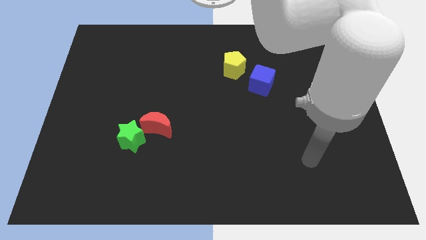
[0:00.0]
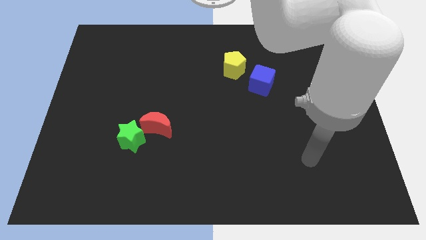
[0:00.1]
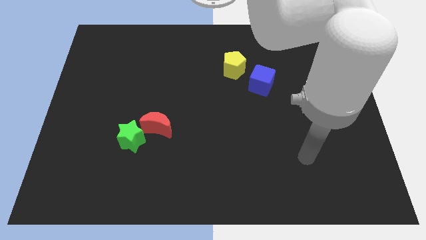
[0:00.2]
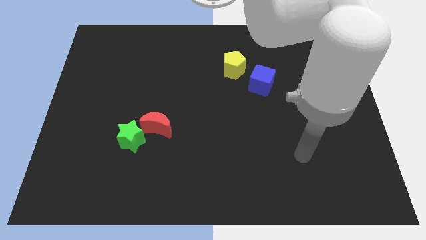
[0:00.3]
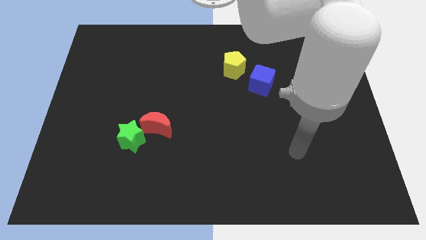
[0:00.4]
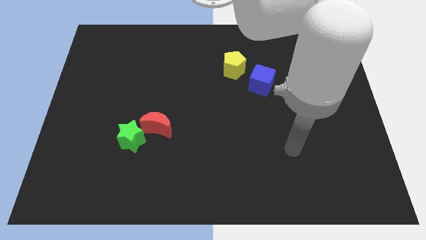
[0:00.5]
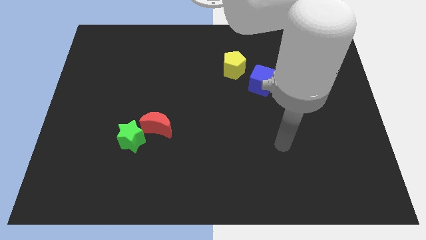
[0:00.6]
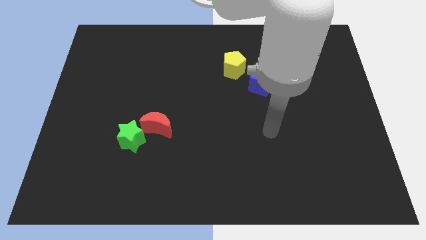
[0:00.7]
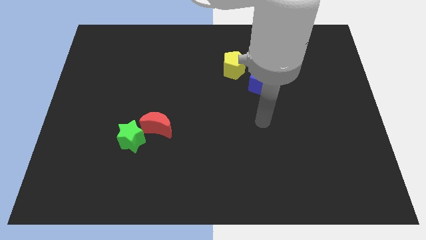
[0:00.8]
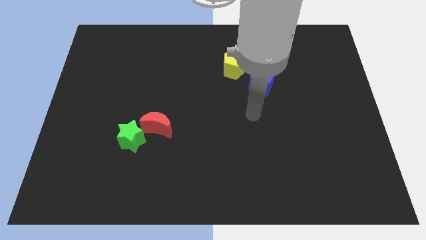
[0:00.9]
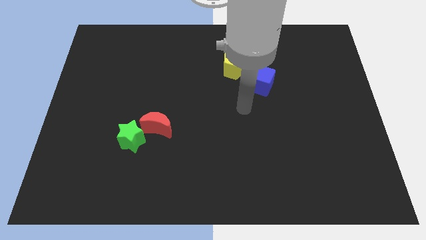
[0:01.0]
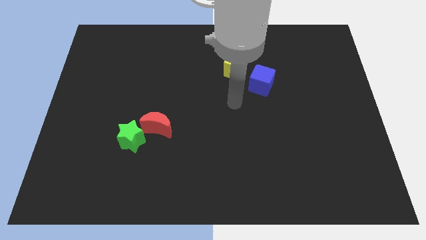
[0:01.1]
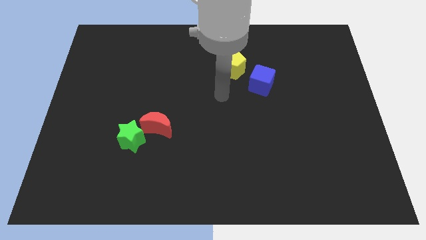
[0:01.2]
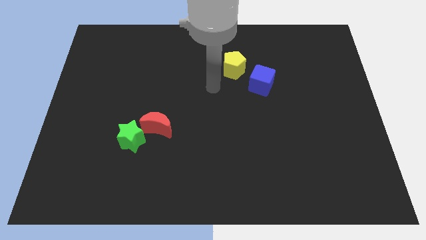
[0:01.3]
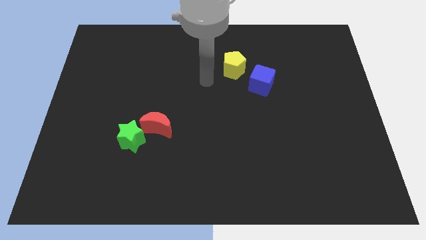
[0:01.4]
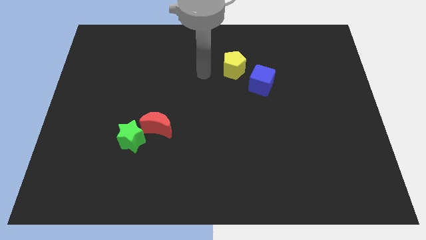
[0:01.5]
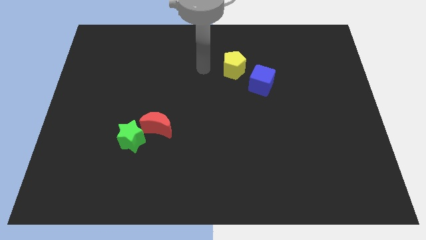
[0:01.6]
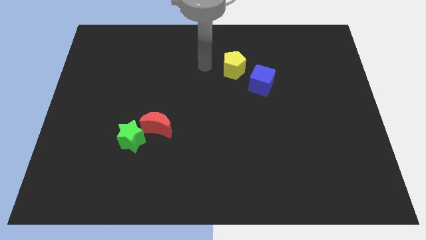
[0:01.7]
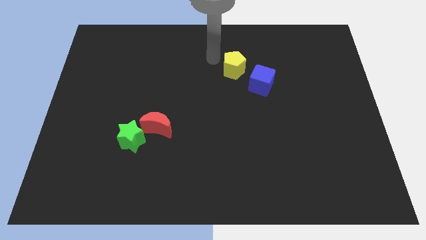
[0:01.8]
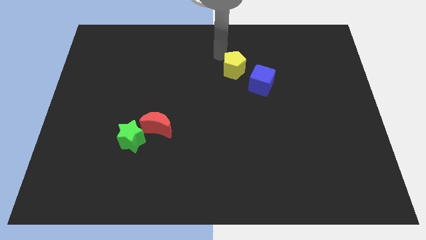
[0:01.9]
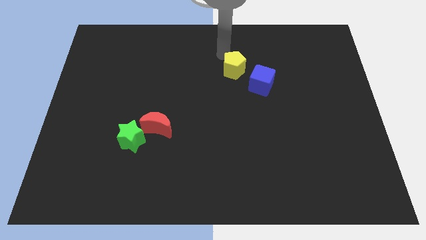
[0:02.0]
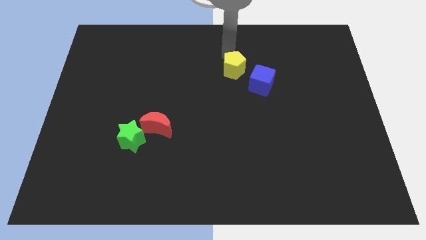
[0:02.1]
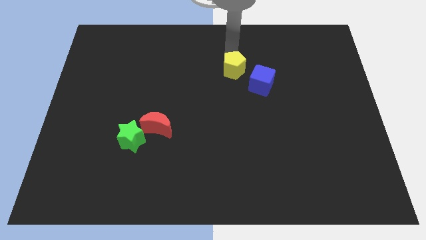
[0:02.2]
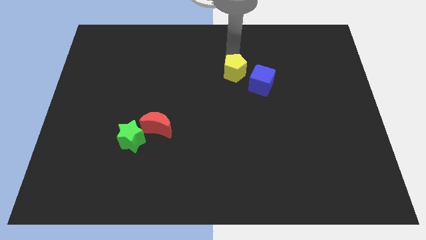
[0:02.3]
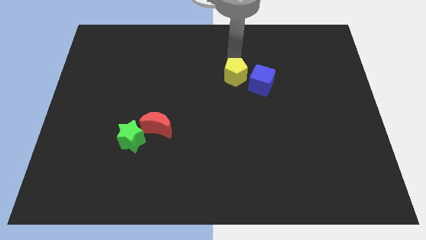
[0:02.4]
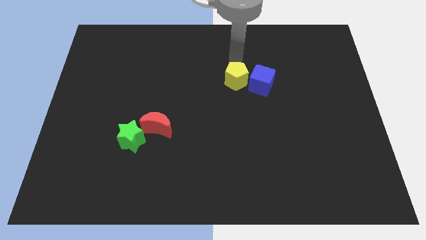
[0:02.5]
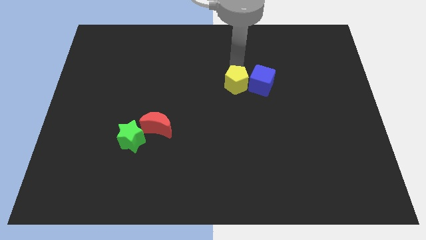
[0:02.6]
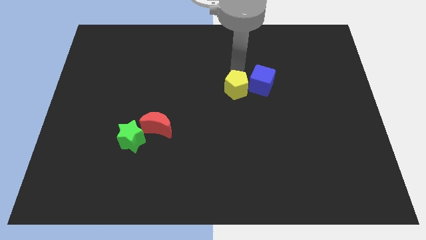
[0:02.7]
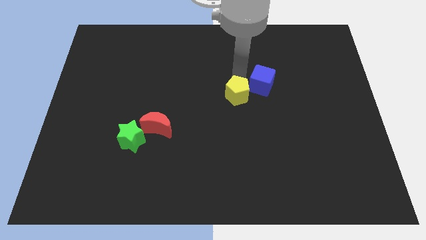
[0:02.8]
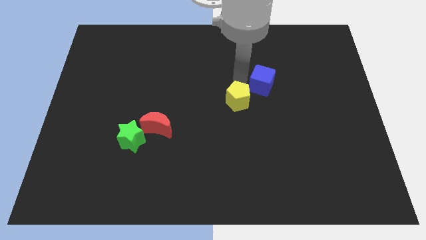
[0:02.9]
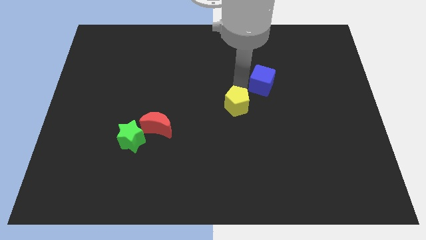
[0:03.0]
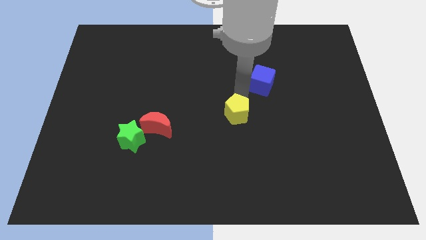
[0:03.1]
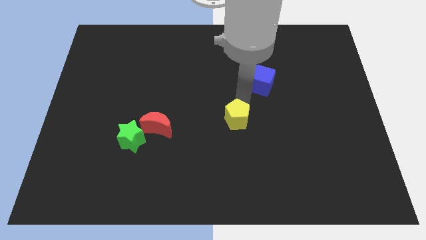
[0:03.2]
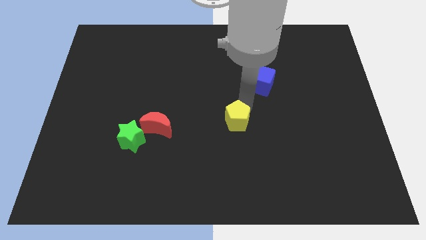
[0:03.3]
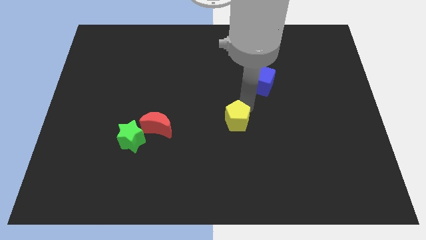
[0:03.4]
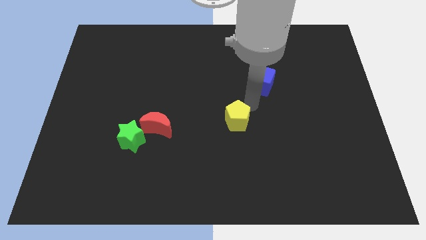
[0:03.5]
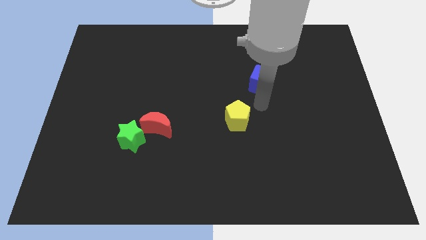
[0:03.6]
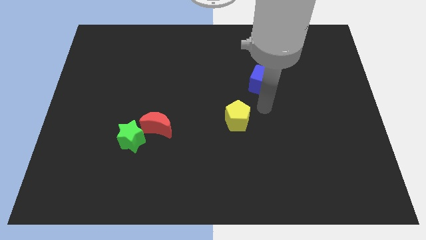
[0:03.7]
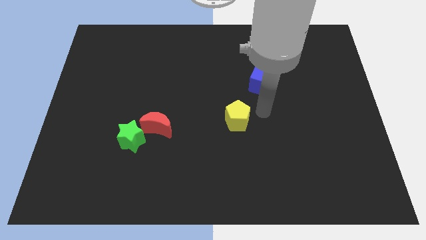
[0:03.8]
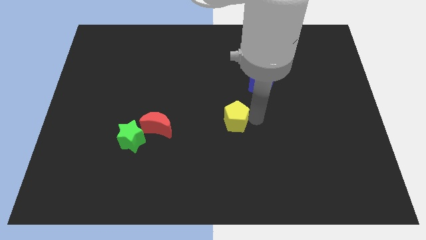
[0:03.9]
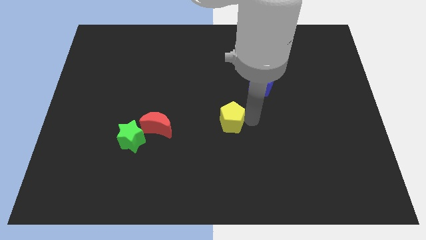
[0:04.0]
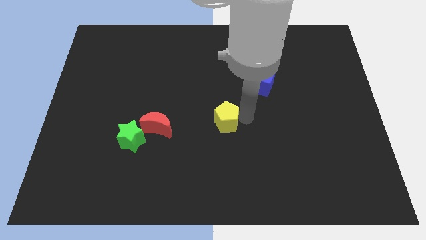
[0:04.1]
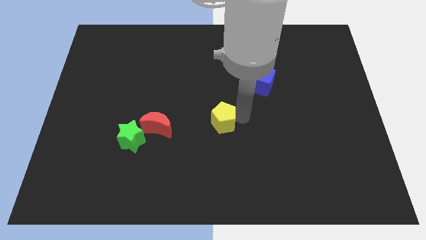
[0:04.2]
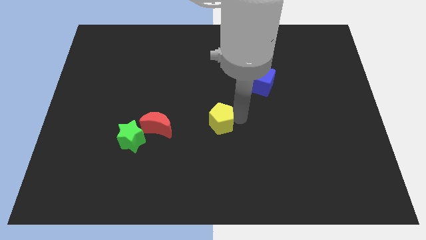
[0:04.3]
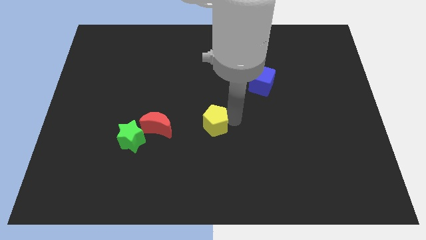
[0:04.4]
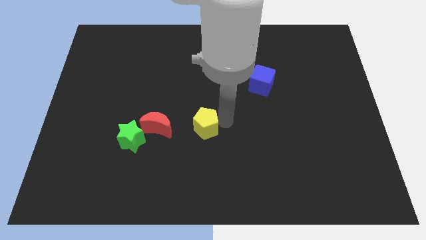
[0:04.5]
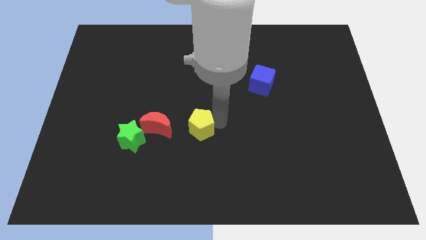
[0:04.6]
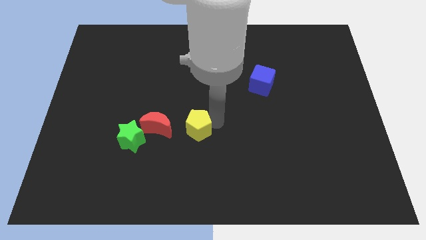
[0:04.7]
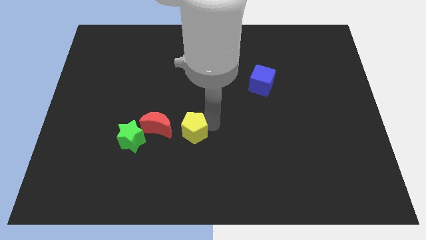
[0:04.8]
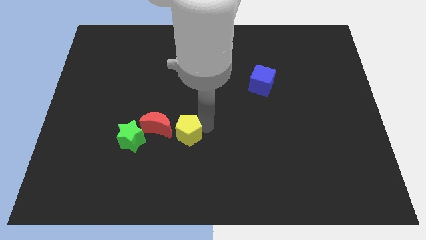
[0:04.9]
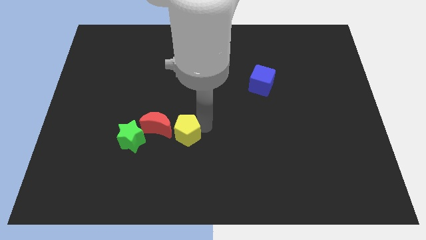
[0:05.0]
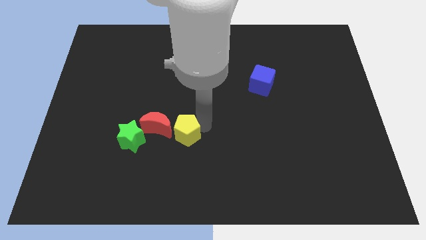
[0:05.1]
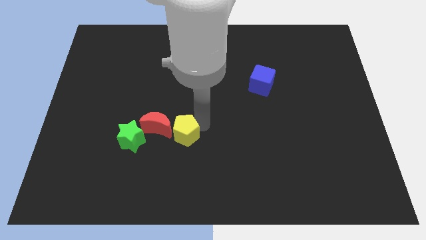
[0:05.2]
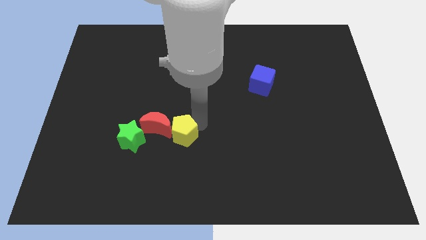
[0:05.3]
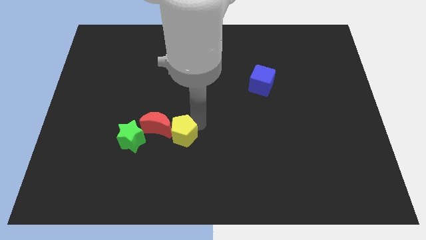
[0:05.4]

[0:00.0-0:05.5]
put the pentagon close to the red moon

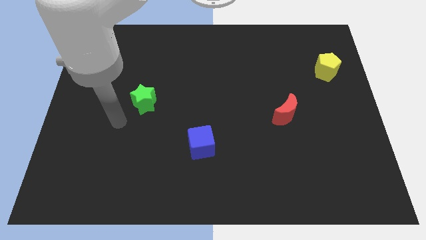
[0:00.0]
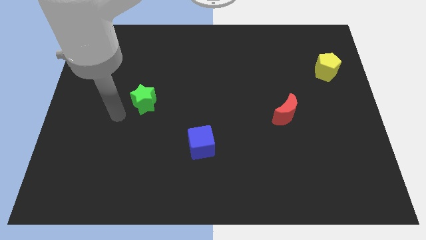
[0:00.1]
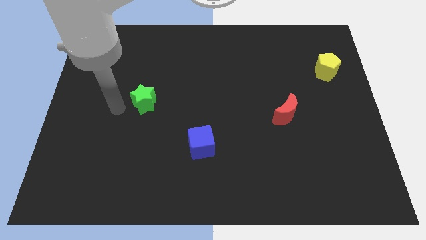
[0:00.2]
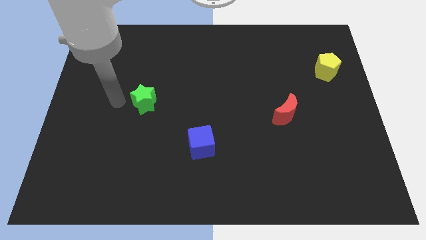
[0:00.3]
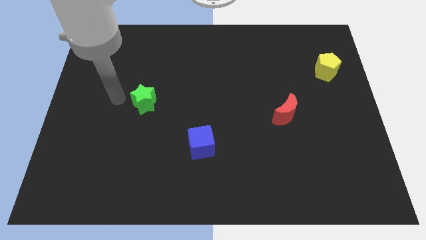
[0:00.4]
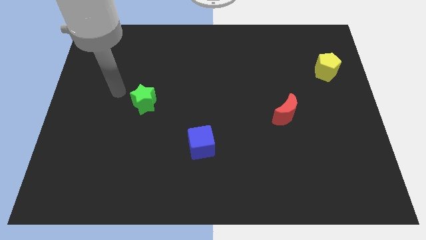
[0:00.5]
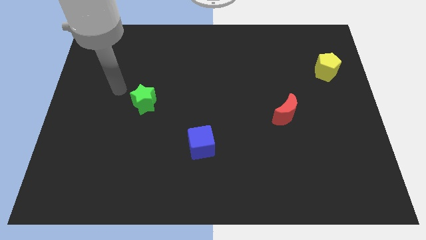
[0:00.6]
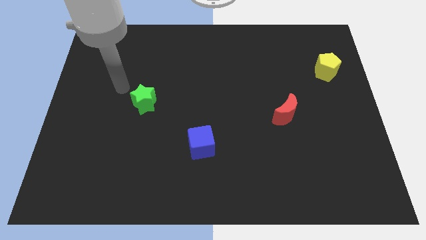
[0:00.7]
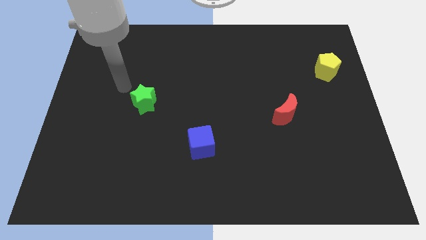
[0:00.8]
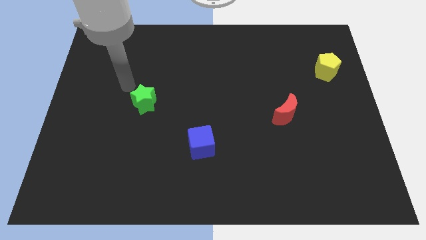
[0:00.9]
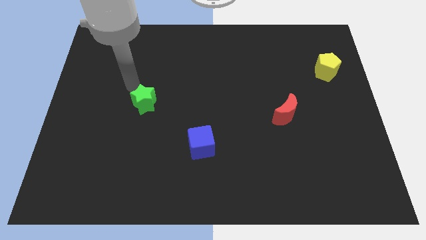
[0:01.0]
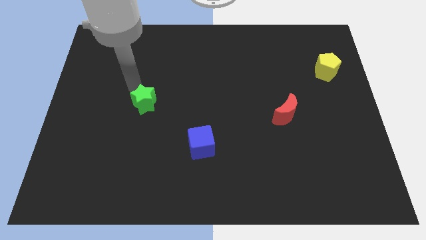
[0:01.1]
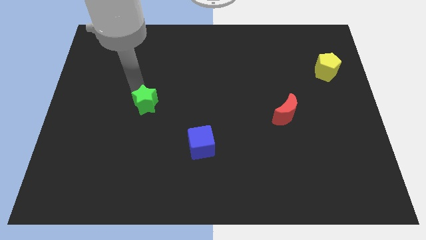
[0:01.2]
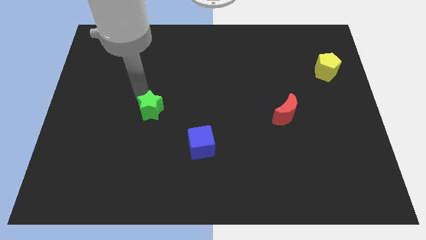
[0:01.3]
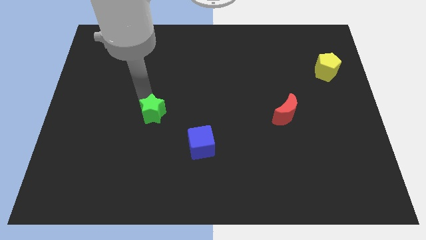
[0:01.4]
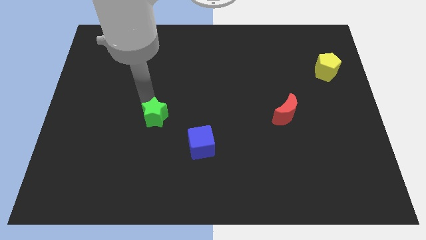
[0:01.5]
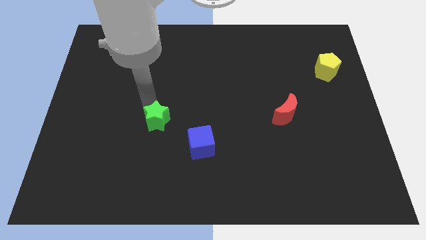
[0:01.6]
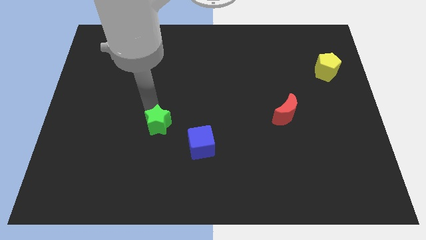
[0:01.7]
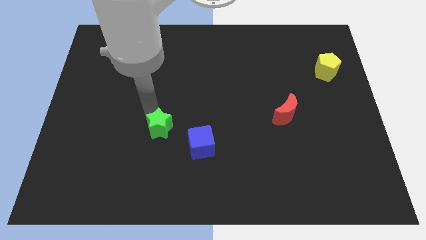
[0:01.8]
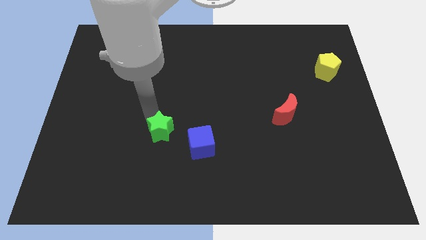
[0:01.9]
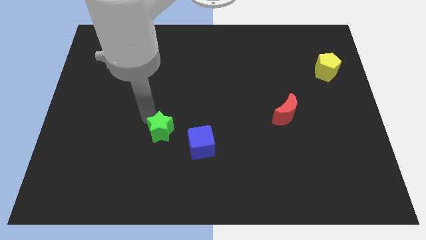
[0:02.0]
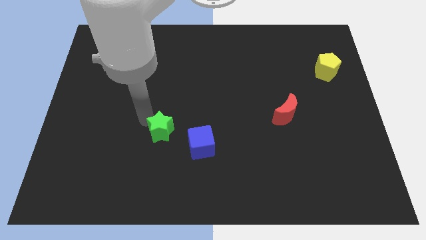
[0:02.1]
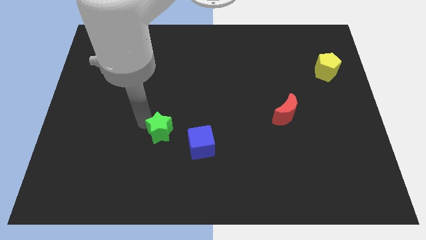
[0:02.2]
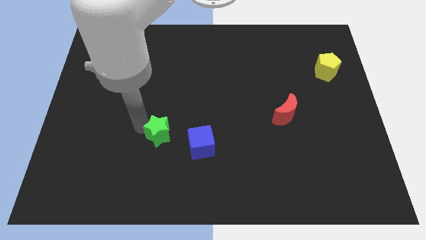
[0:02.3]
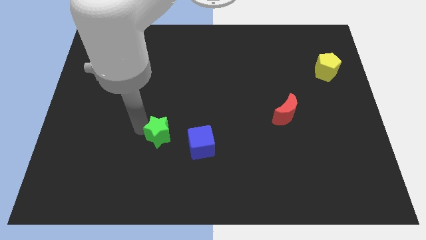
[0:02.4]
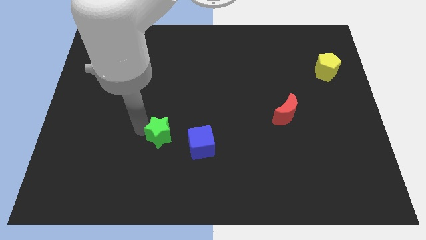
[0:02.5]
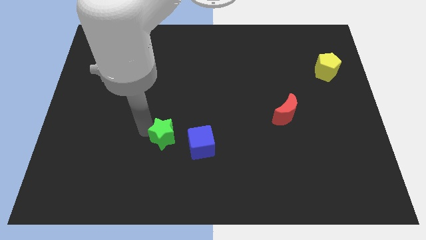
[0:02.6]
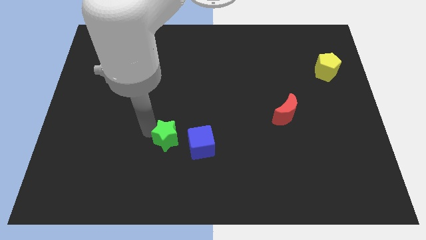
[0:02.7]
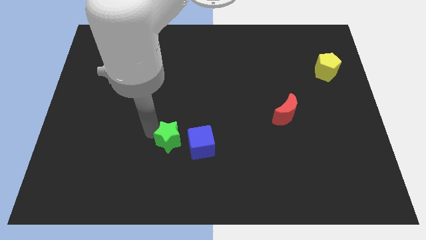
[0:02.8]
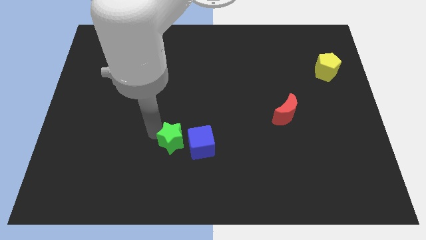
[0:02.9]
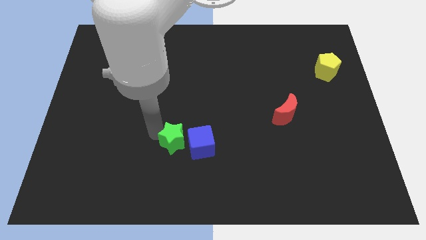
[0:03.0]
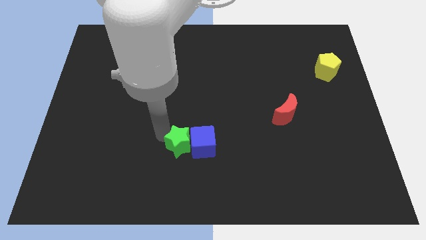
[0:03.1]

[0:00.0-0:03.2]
slide the green block next to the blue cube
